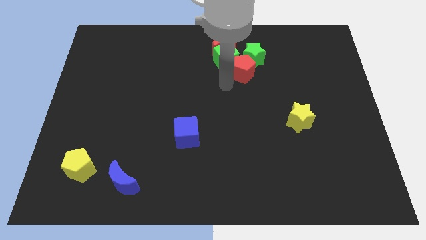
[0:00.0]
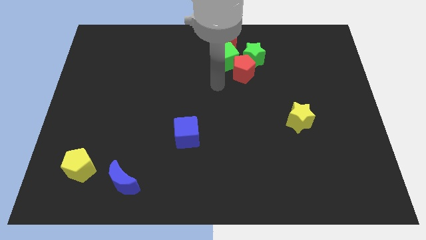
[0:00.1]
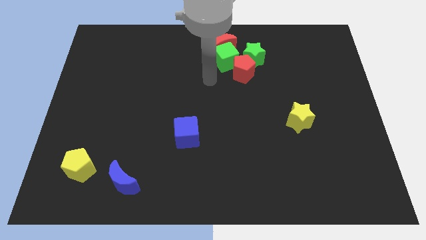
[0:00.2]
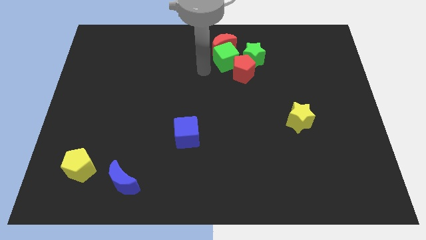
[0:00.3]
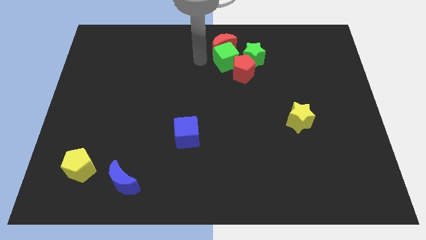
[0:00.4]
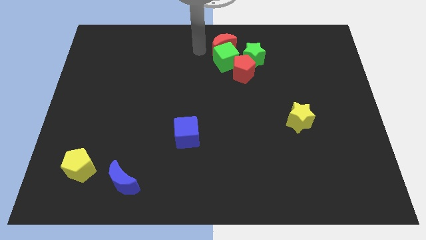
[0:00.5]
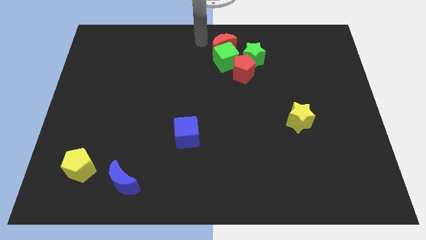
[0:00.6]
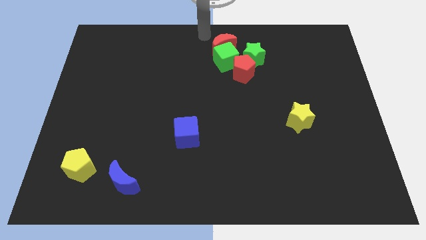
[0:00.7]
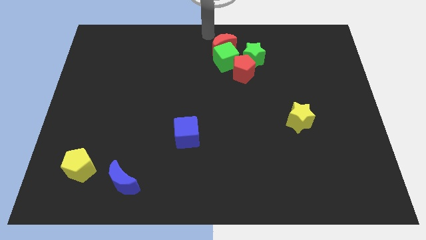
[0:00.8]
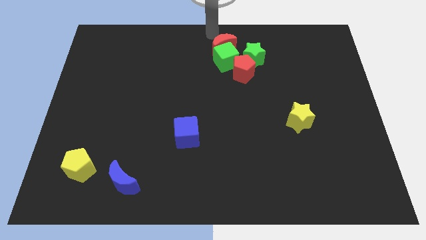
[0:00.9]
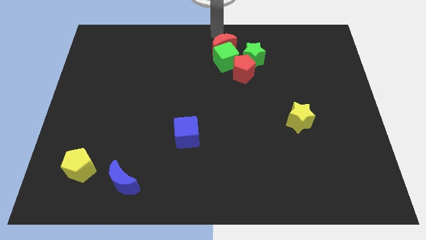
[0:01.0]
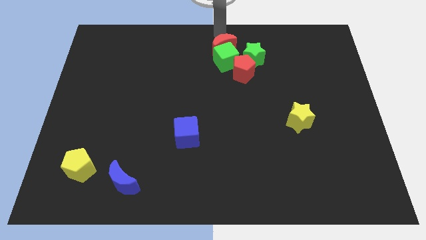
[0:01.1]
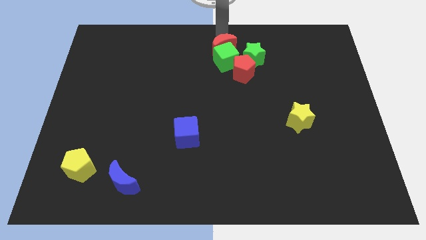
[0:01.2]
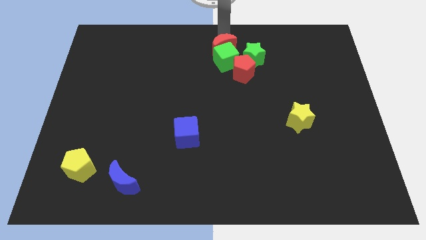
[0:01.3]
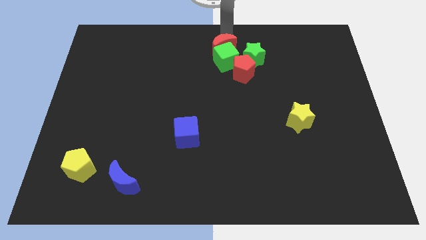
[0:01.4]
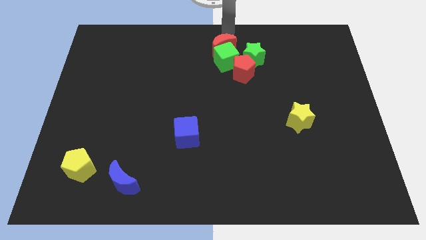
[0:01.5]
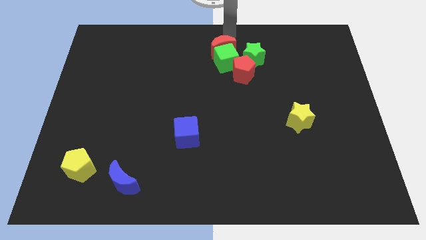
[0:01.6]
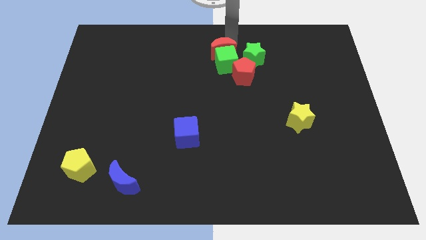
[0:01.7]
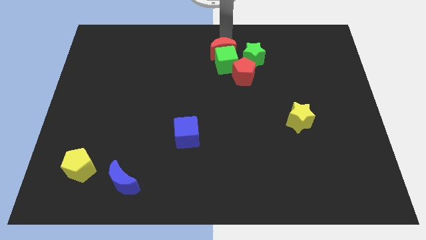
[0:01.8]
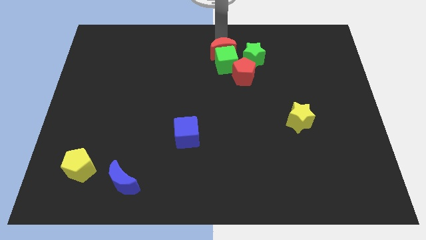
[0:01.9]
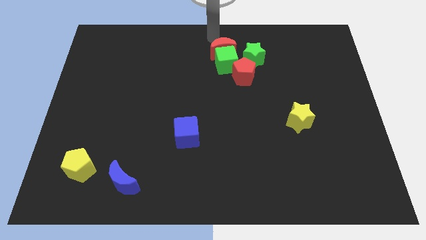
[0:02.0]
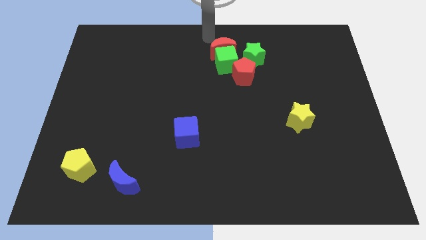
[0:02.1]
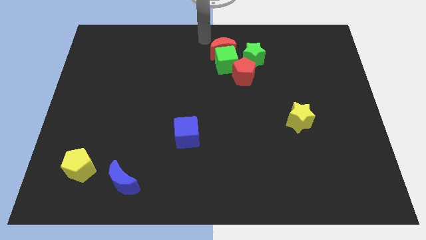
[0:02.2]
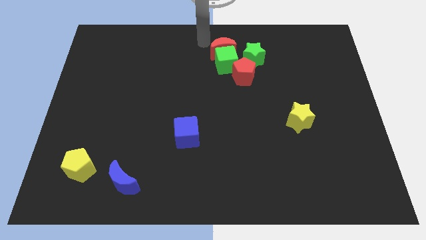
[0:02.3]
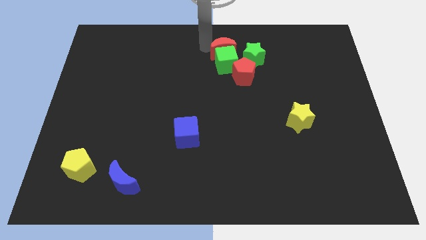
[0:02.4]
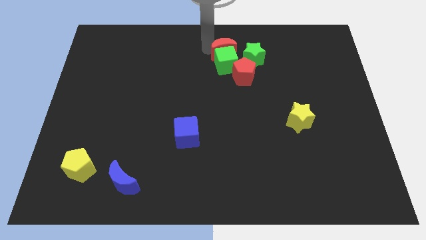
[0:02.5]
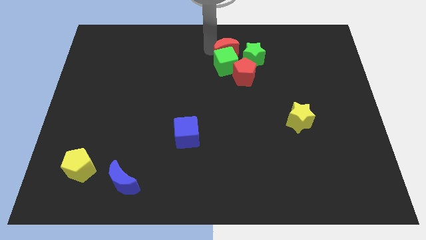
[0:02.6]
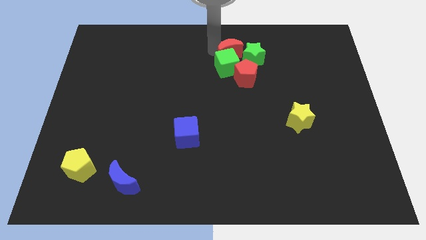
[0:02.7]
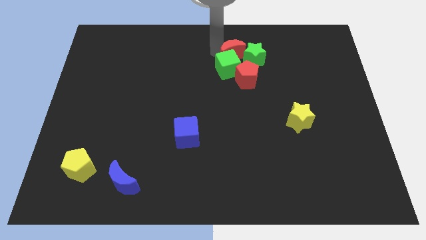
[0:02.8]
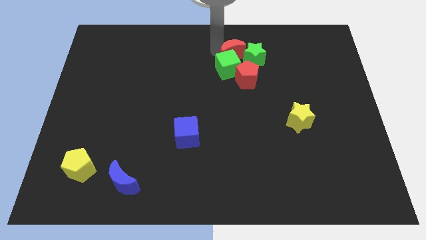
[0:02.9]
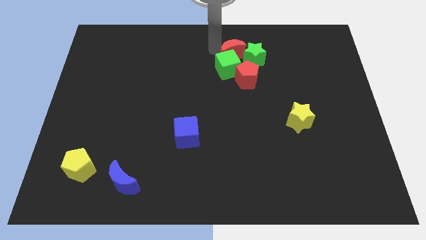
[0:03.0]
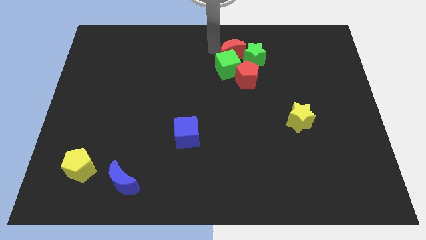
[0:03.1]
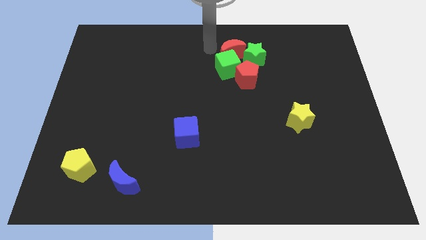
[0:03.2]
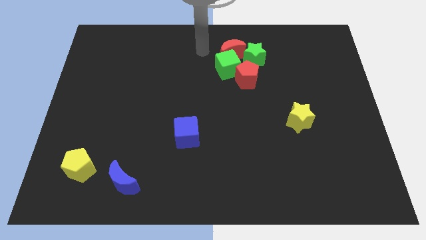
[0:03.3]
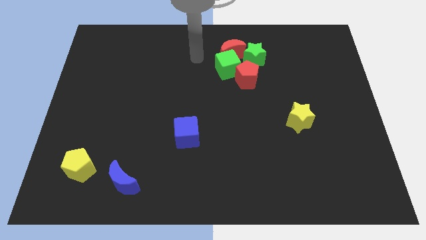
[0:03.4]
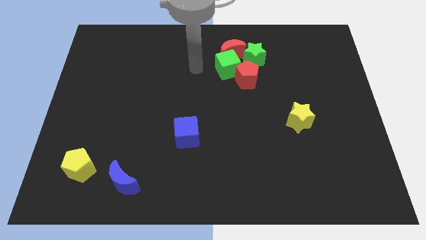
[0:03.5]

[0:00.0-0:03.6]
push the red moon slightly downwards

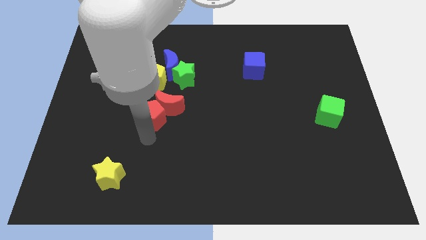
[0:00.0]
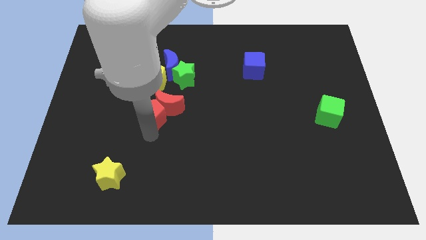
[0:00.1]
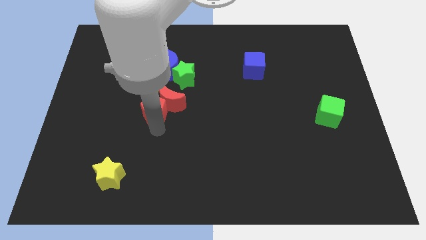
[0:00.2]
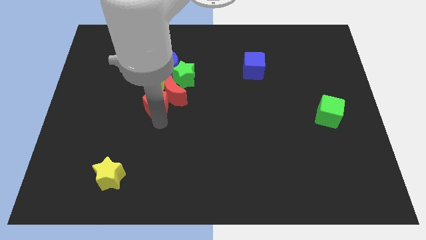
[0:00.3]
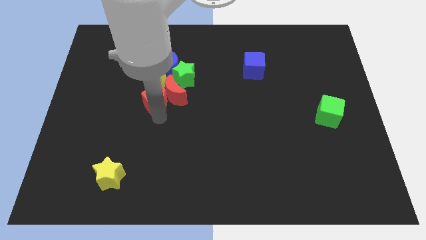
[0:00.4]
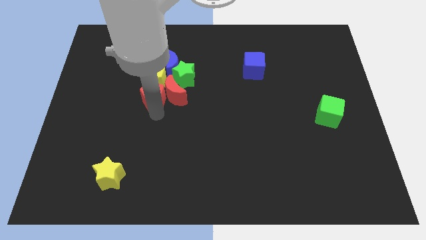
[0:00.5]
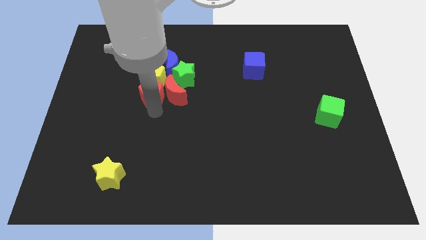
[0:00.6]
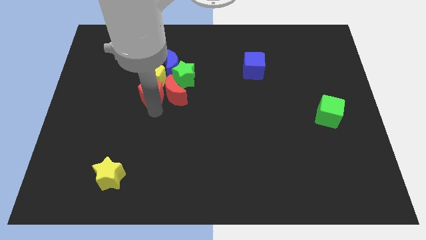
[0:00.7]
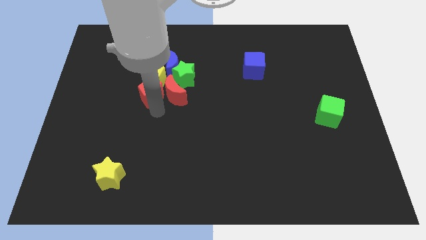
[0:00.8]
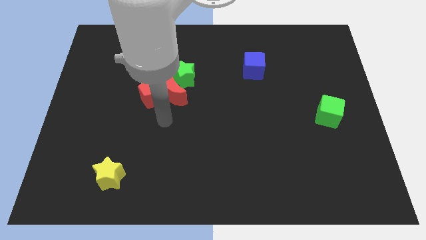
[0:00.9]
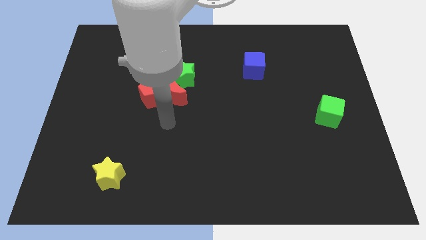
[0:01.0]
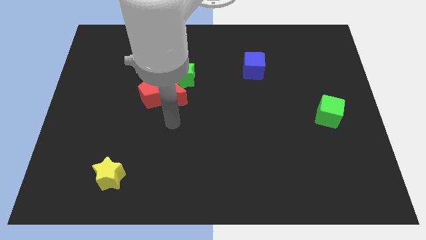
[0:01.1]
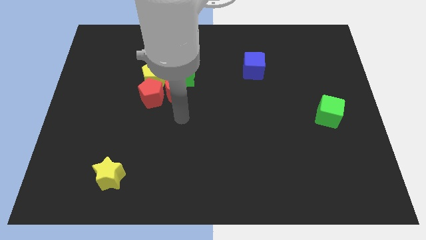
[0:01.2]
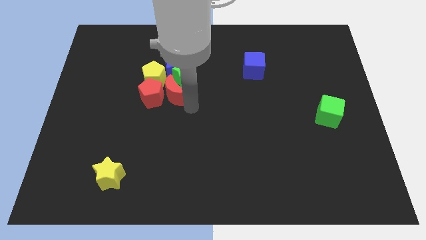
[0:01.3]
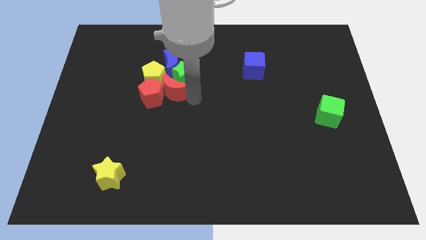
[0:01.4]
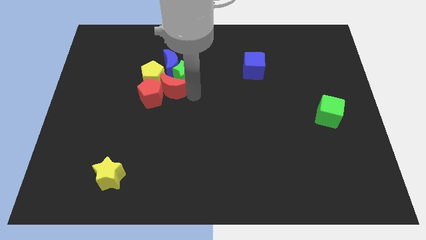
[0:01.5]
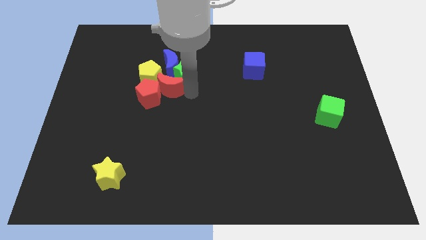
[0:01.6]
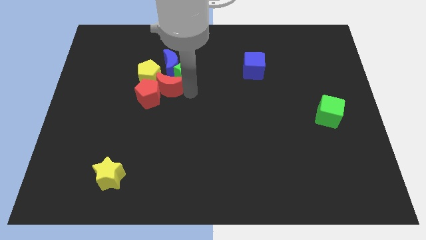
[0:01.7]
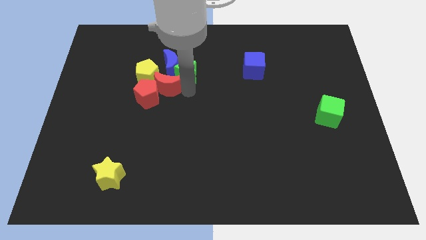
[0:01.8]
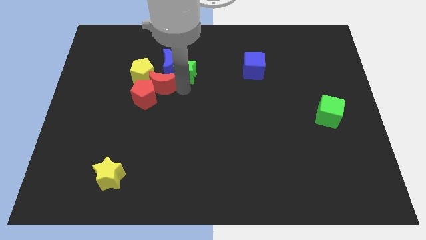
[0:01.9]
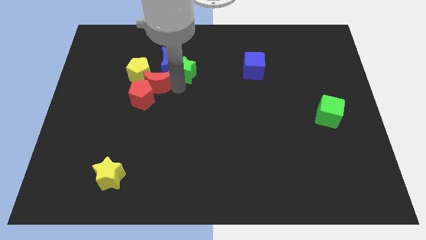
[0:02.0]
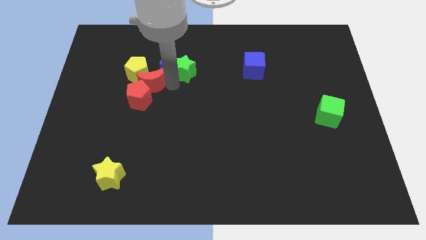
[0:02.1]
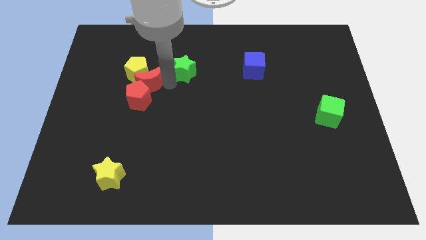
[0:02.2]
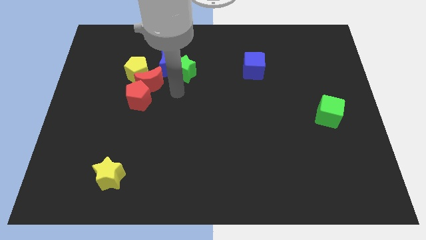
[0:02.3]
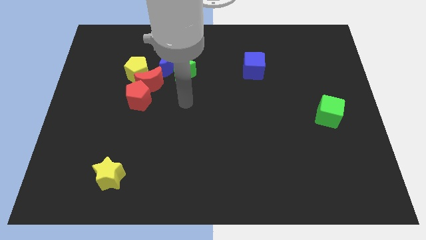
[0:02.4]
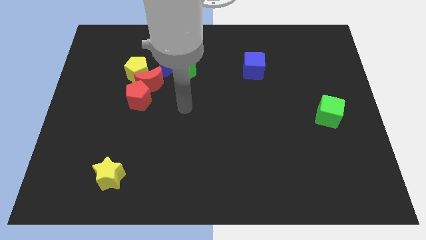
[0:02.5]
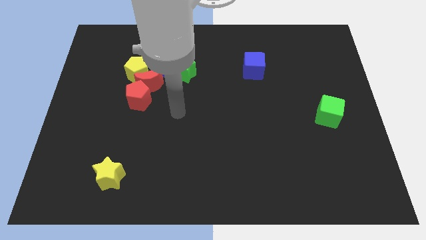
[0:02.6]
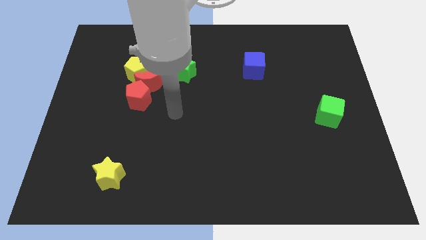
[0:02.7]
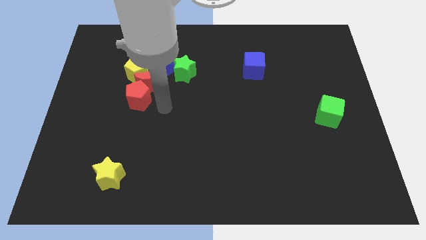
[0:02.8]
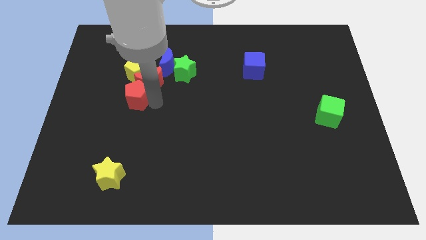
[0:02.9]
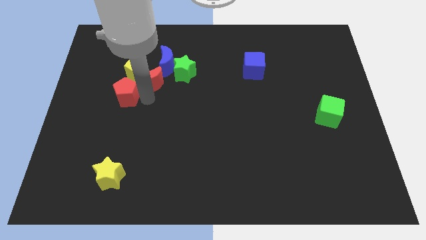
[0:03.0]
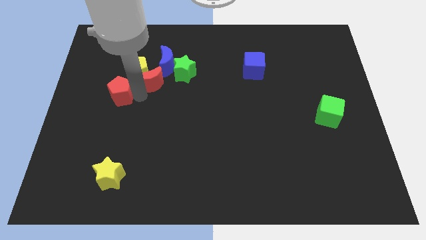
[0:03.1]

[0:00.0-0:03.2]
place your arm in between the red blocks

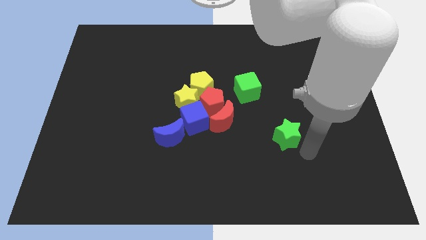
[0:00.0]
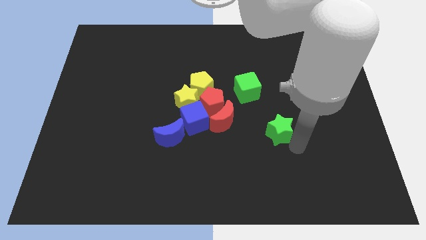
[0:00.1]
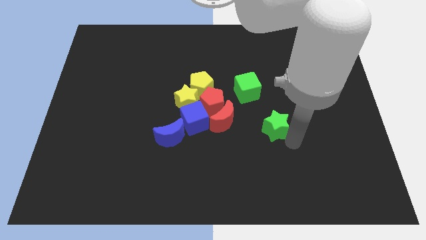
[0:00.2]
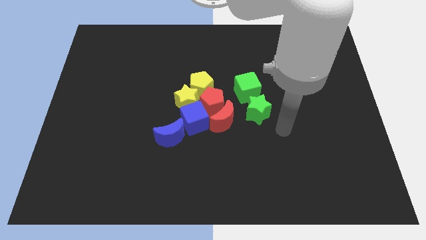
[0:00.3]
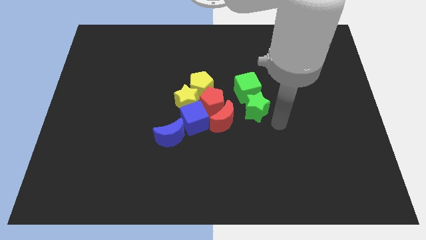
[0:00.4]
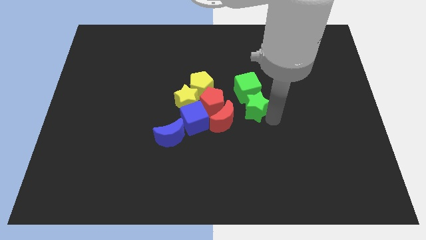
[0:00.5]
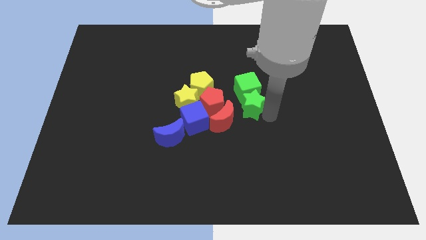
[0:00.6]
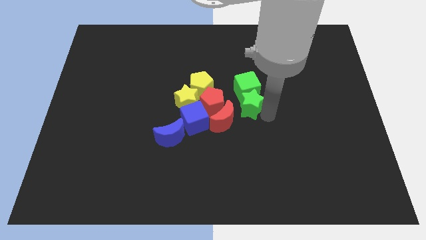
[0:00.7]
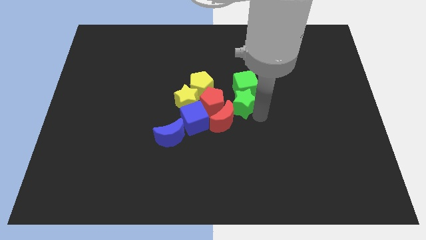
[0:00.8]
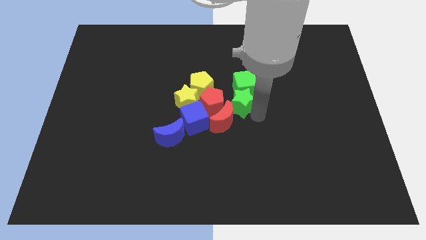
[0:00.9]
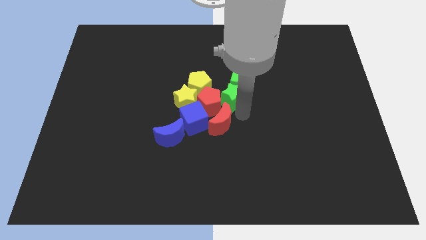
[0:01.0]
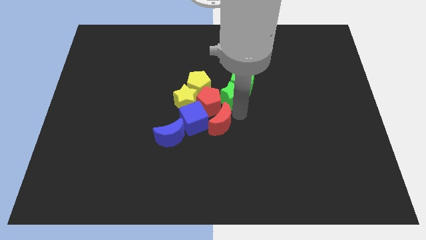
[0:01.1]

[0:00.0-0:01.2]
push the green star to the bottom of the green cube

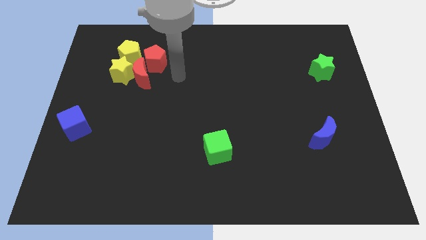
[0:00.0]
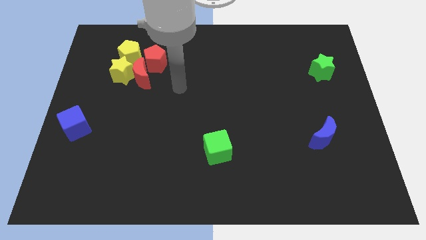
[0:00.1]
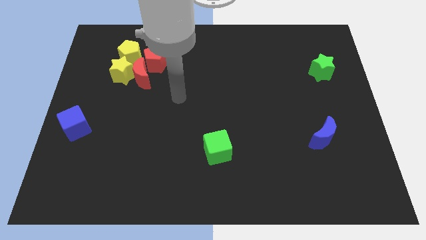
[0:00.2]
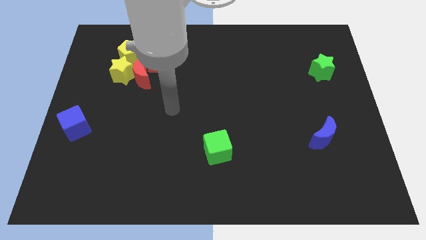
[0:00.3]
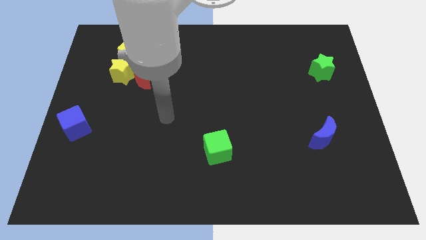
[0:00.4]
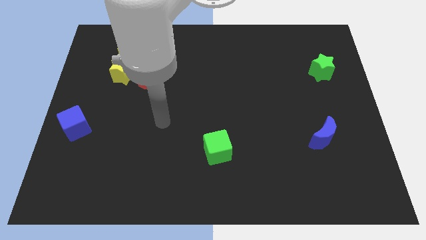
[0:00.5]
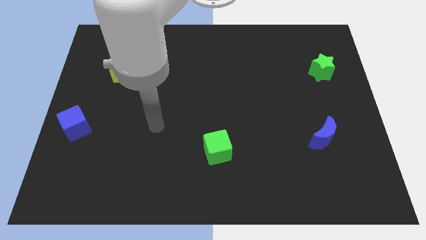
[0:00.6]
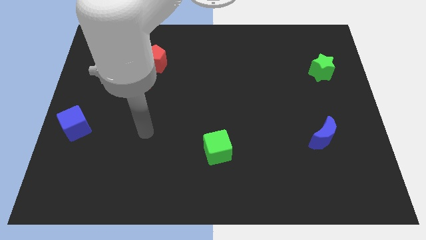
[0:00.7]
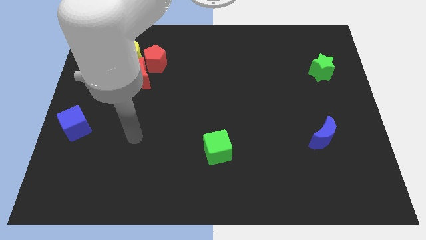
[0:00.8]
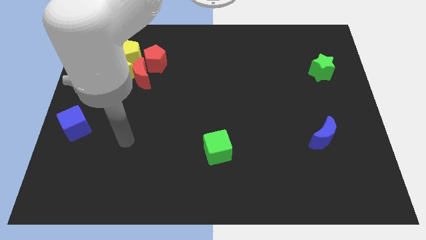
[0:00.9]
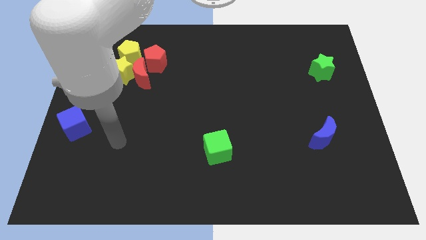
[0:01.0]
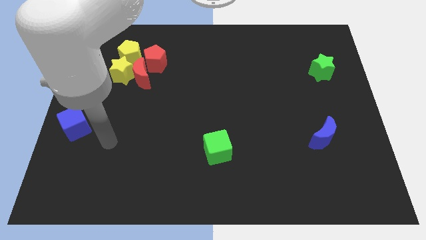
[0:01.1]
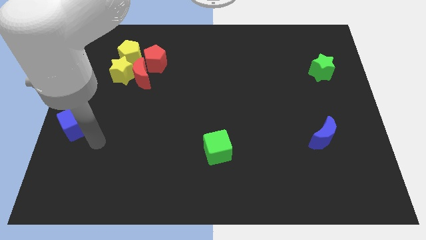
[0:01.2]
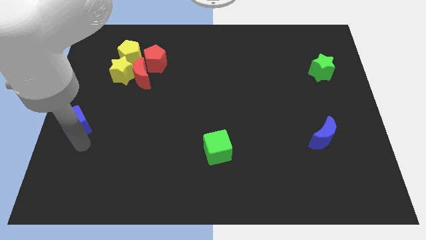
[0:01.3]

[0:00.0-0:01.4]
point your hand below the blue cube
